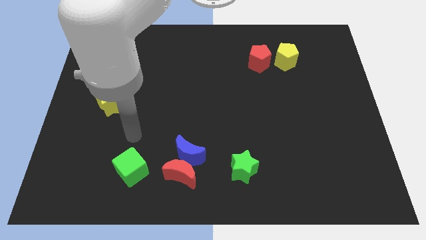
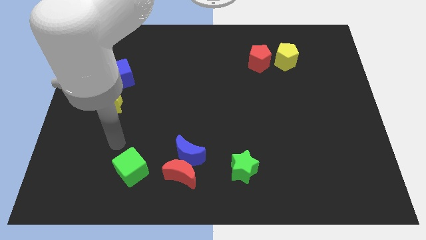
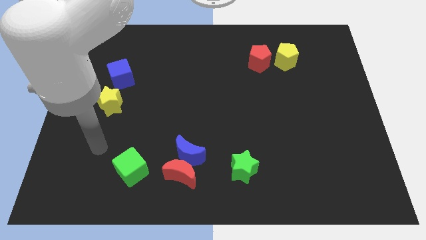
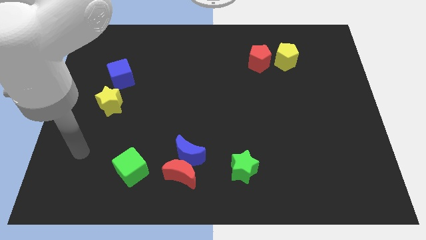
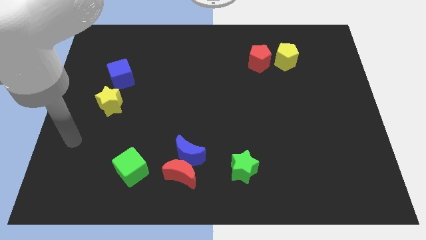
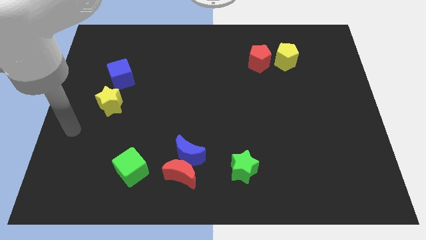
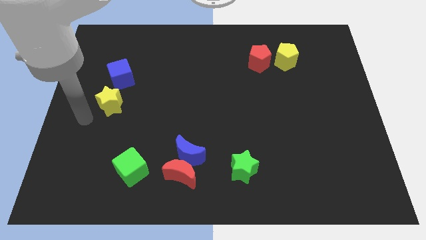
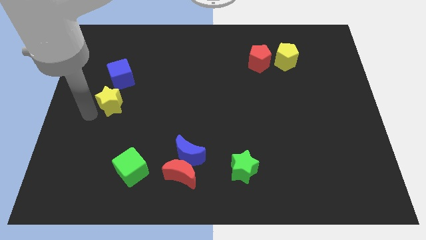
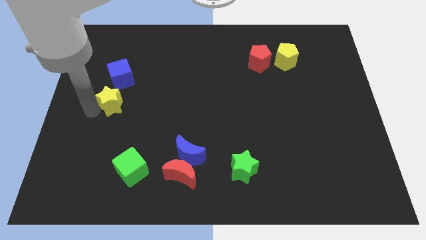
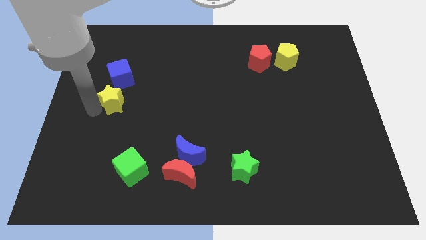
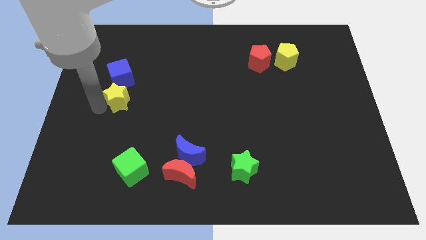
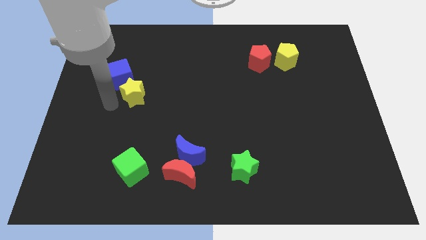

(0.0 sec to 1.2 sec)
push yellow star below blue cube

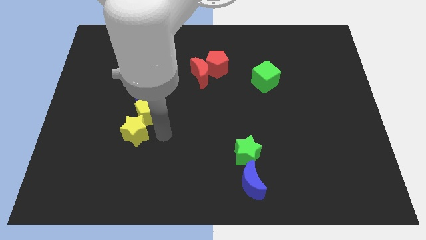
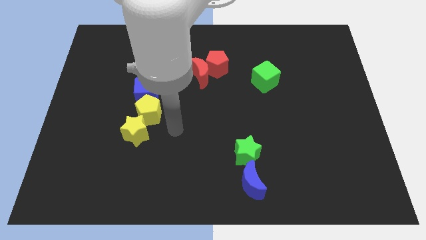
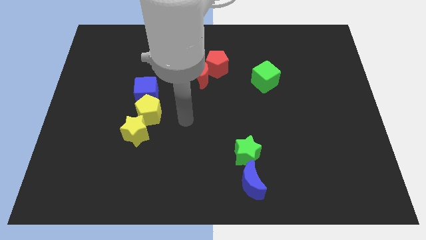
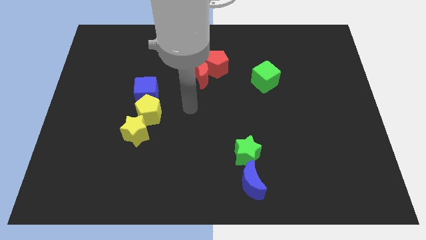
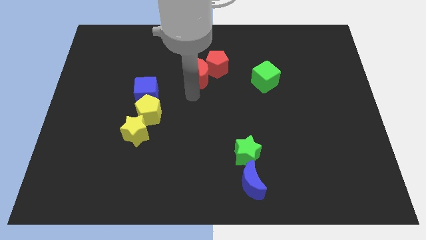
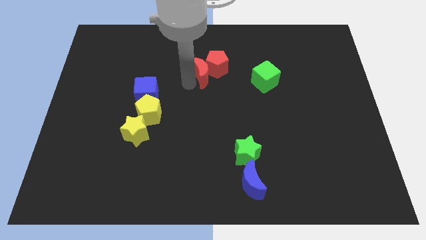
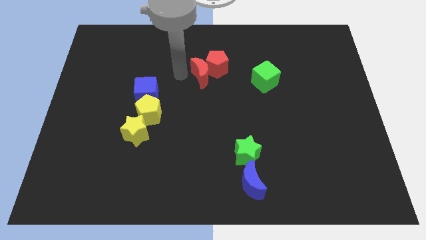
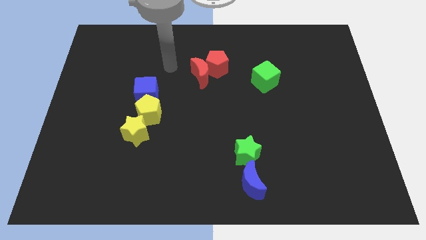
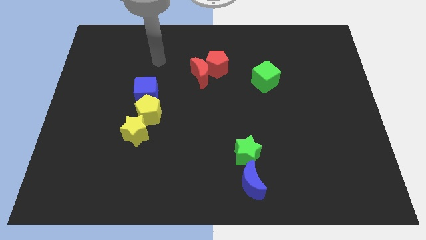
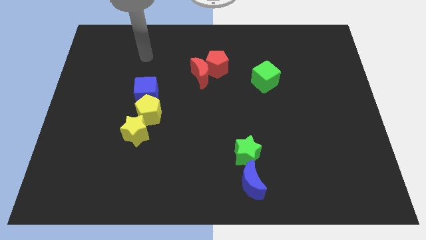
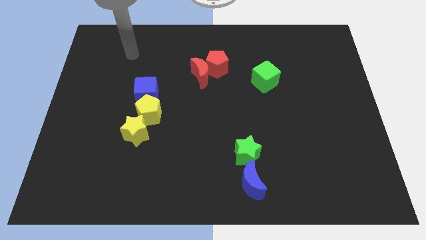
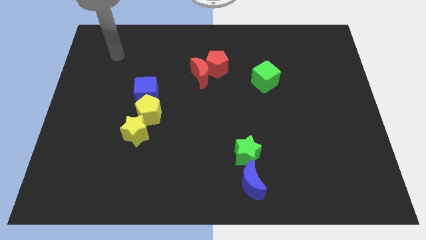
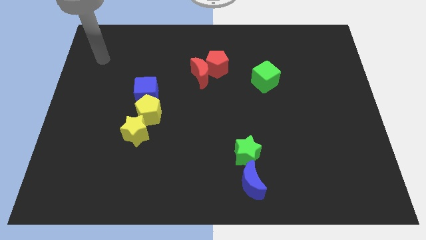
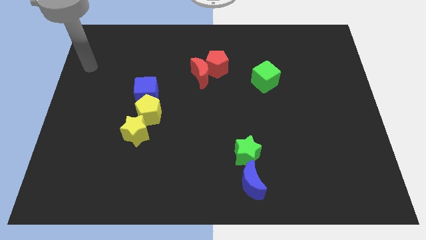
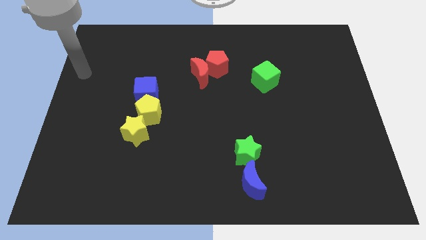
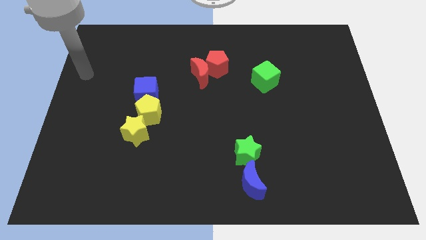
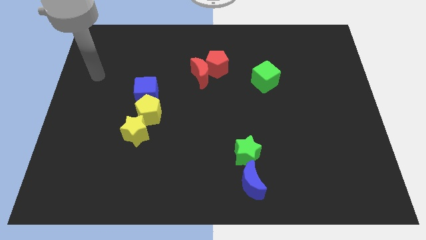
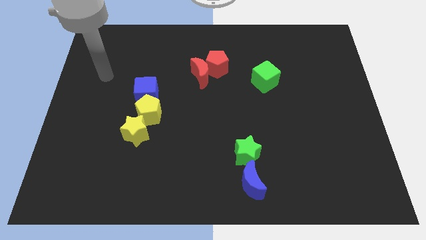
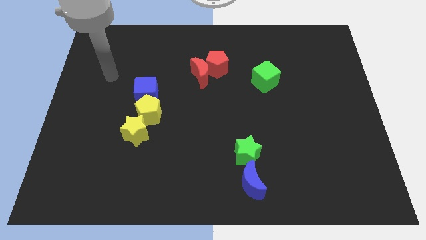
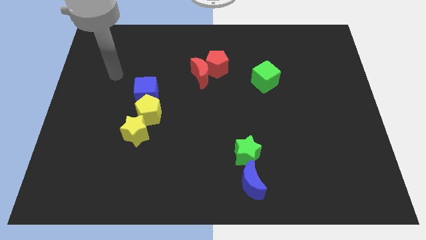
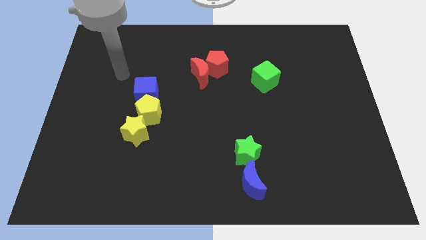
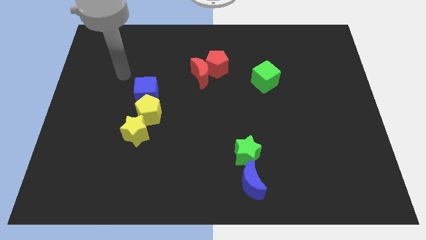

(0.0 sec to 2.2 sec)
place your hand at top left side of the blue cube

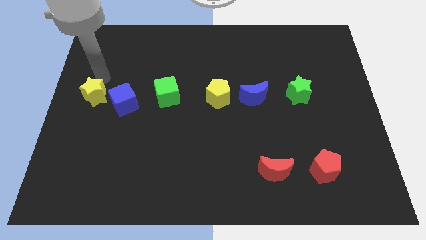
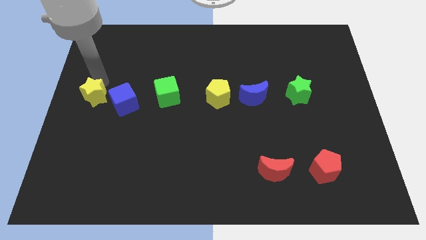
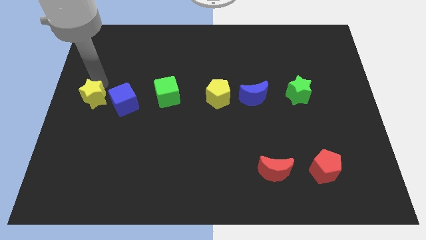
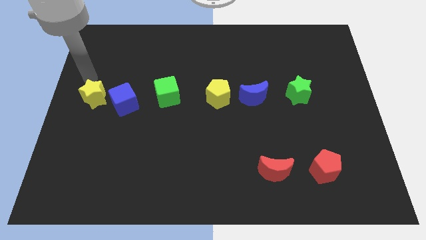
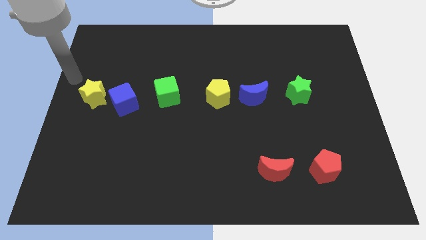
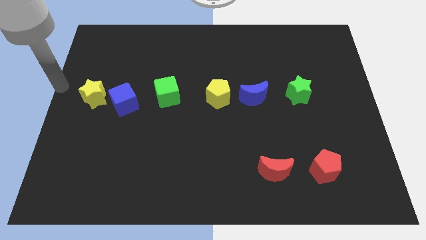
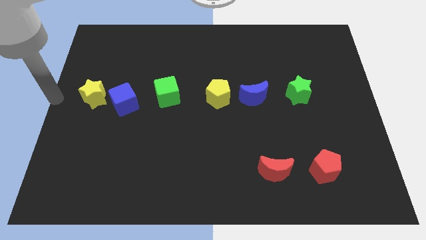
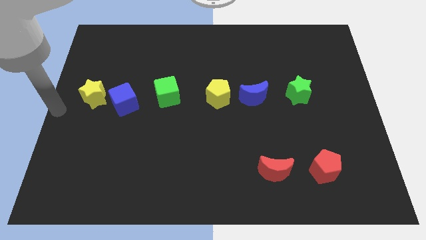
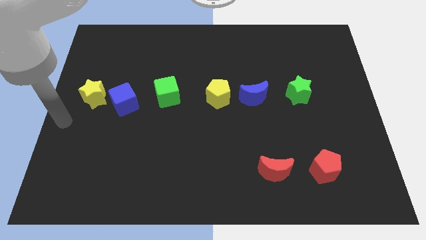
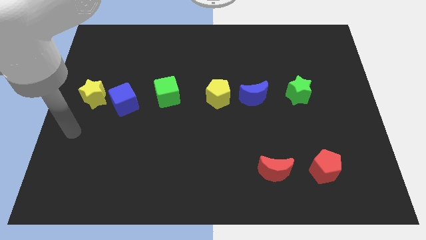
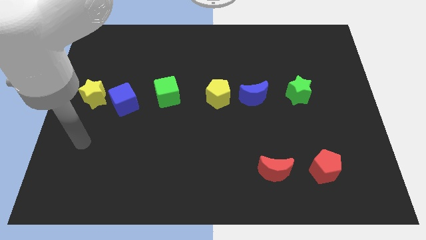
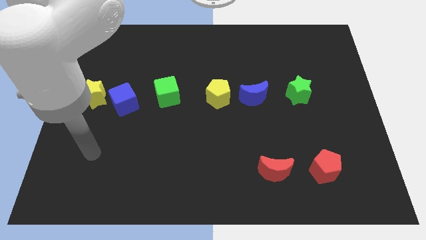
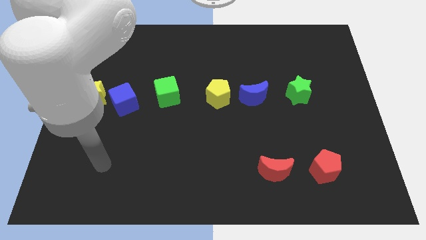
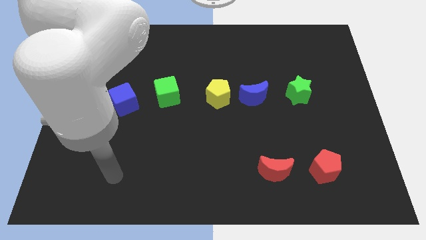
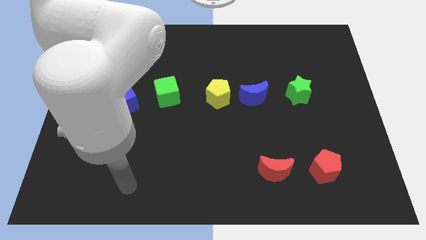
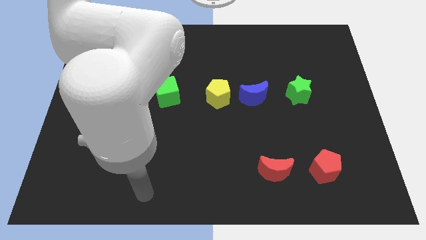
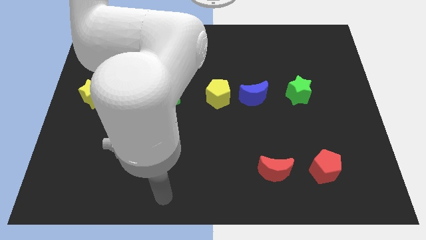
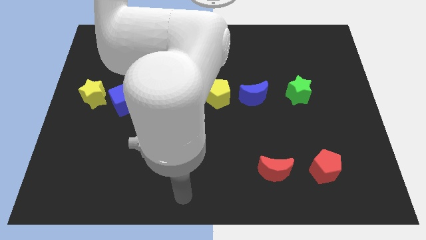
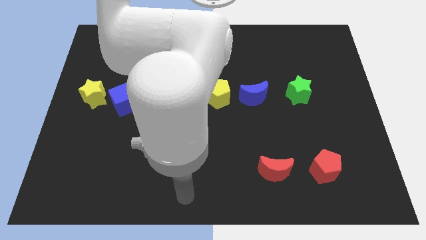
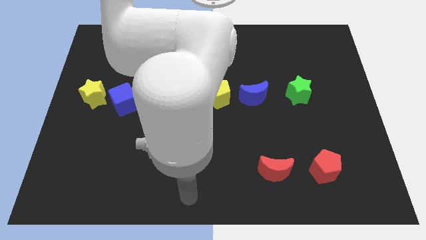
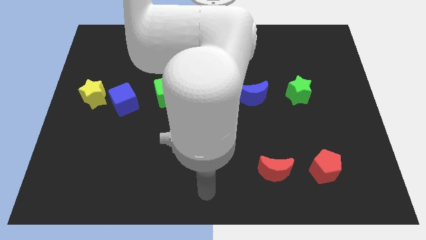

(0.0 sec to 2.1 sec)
move your hand away from yellow star

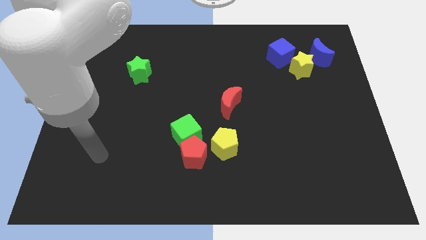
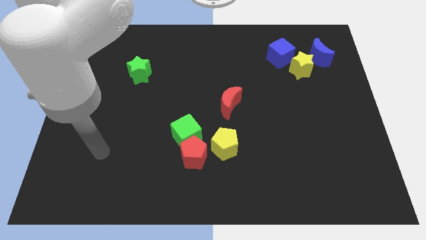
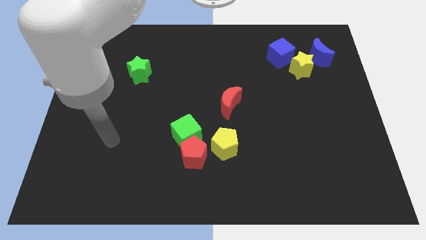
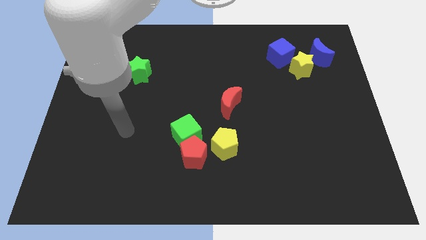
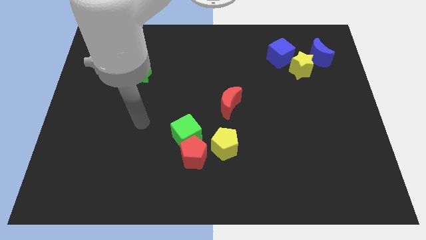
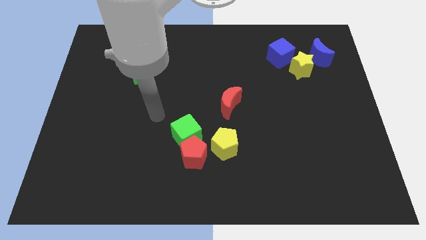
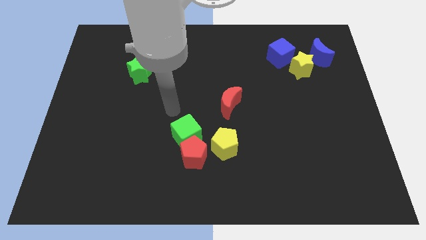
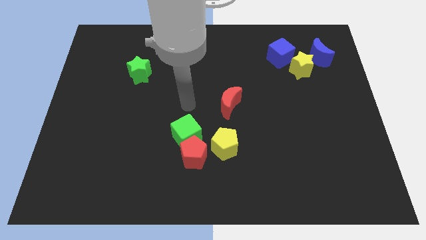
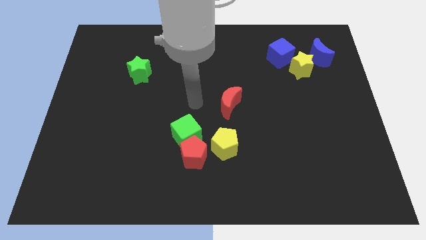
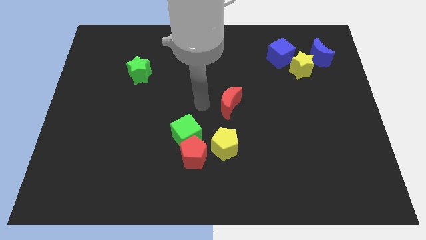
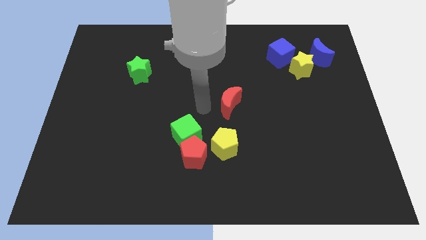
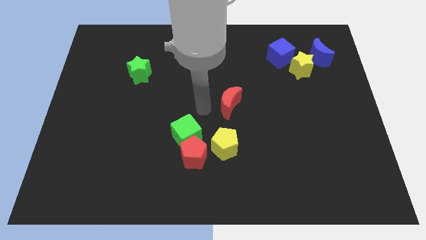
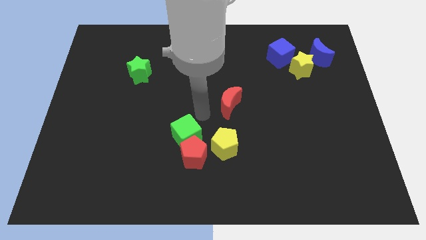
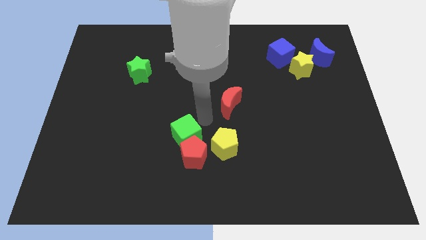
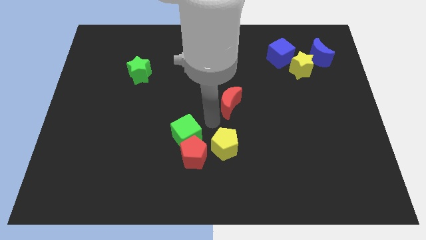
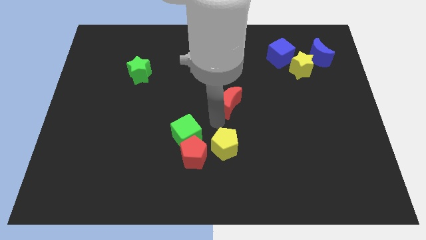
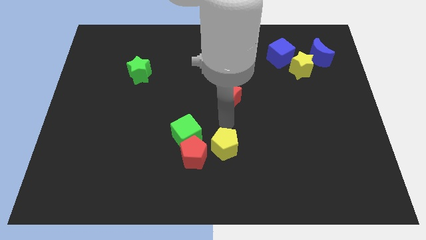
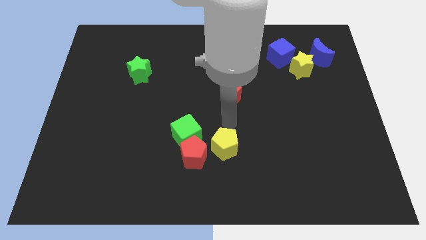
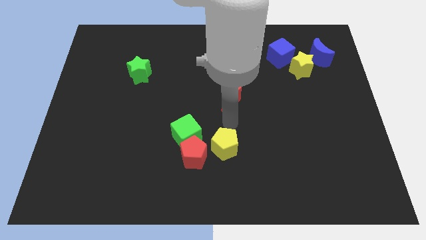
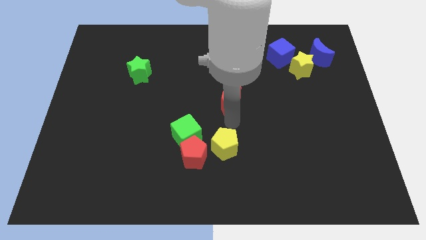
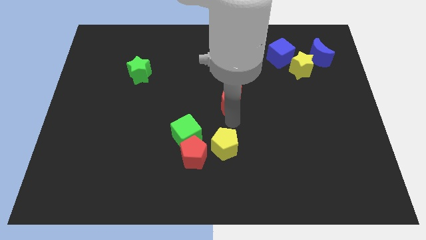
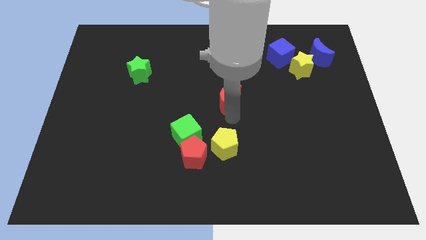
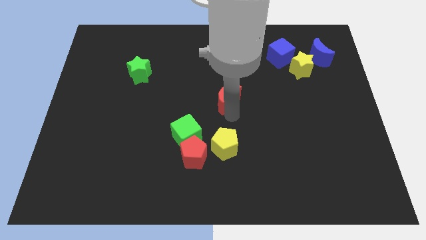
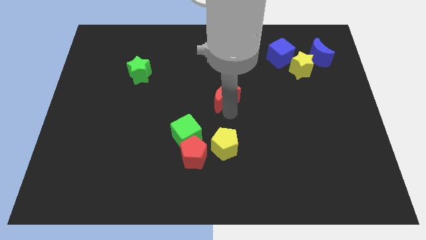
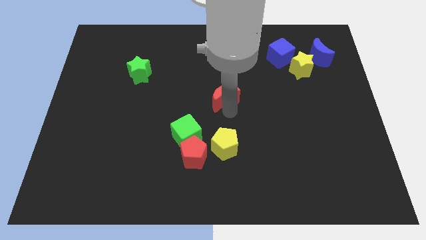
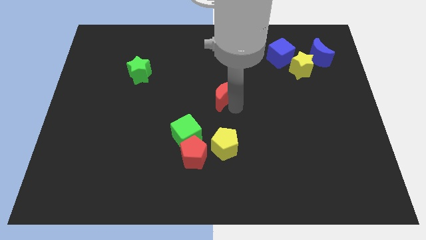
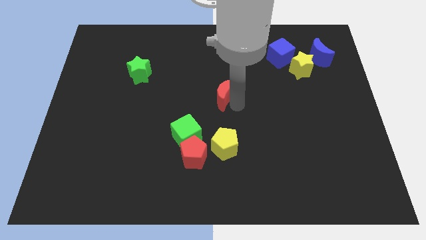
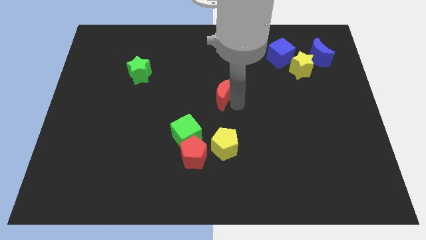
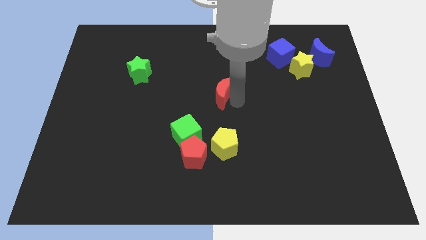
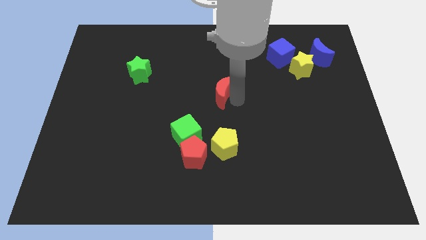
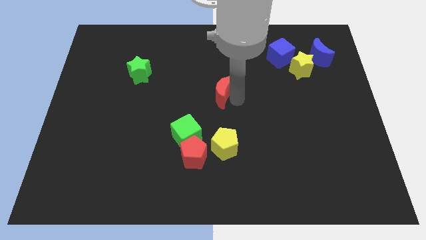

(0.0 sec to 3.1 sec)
move the red moon to the center

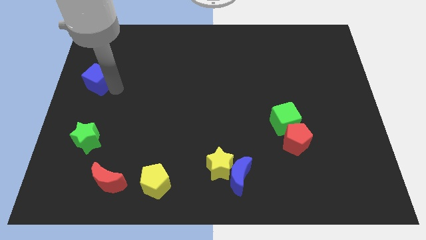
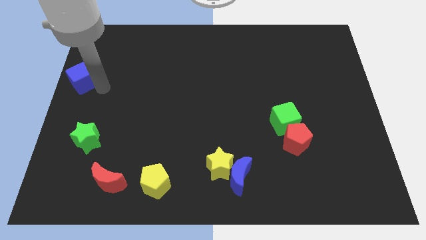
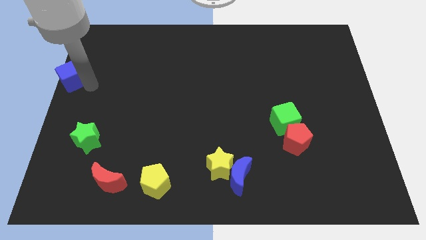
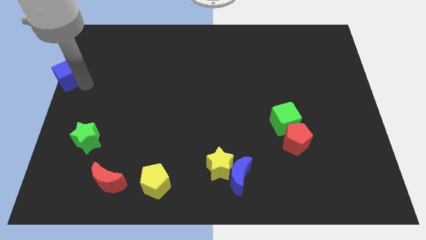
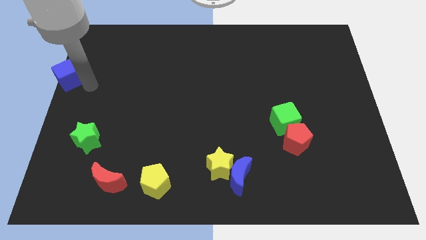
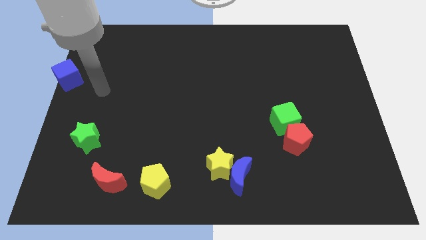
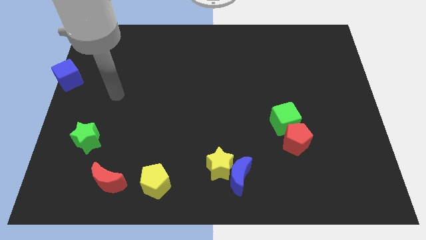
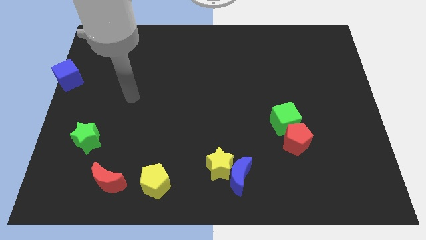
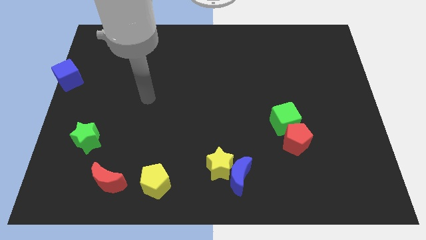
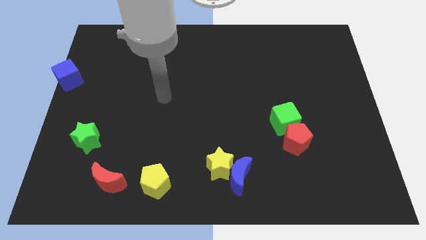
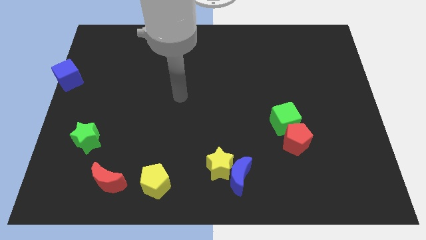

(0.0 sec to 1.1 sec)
place the blue cube at the left side of the board
